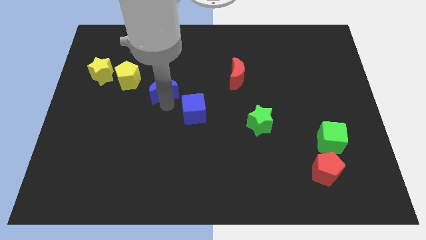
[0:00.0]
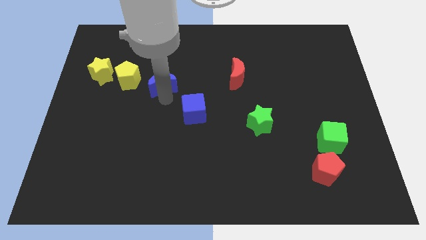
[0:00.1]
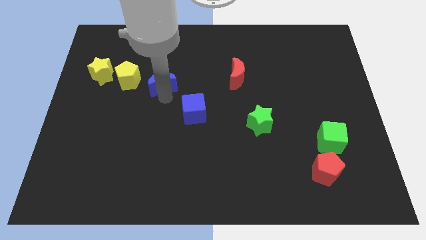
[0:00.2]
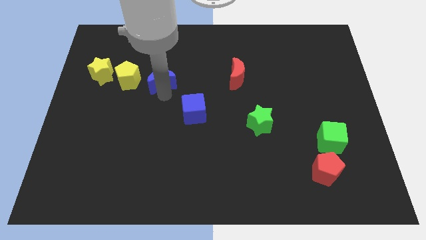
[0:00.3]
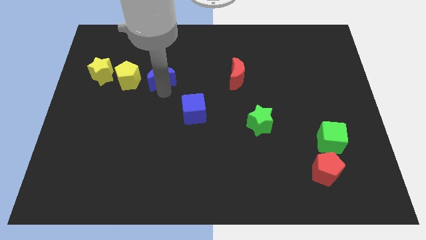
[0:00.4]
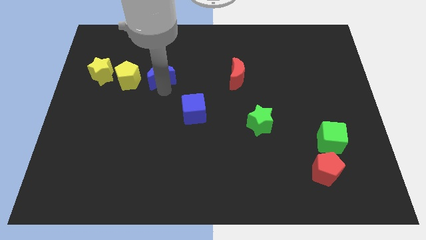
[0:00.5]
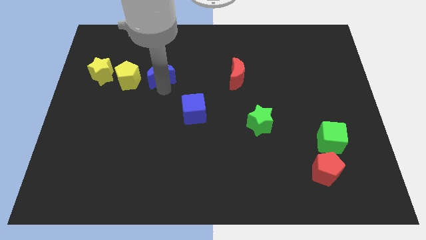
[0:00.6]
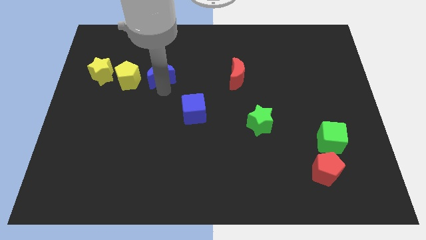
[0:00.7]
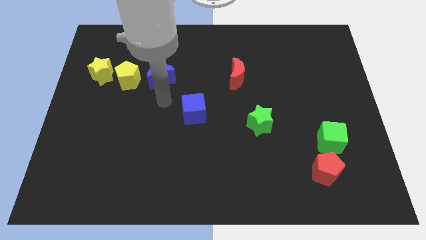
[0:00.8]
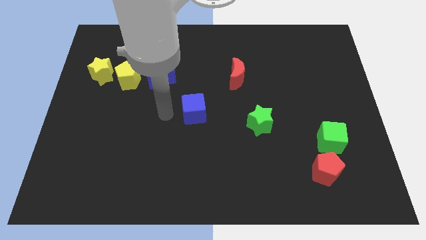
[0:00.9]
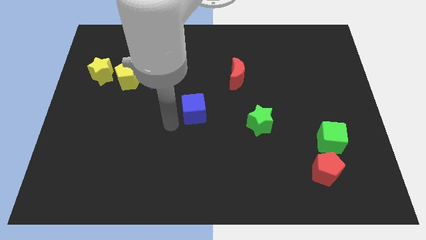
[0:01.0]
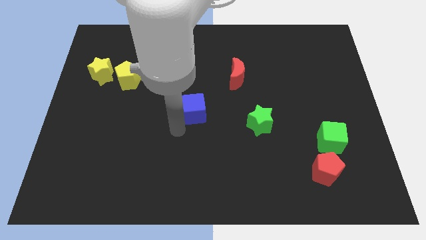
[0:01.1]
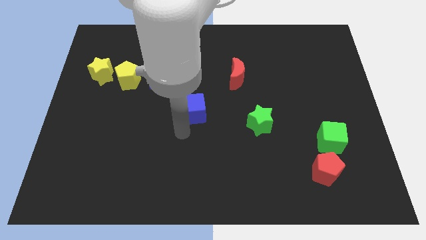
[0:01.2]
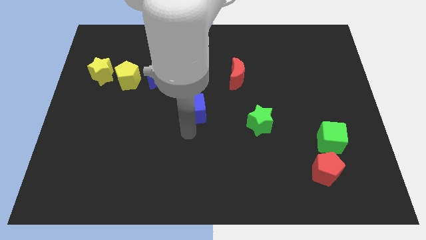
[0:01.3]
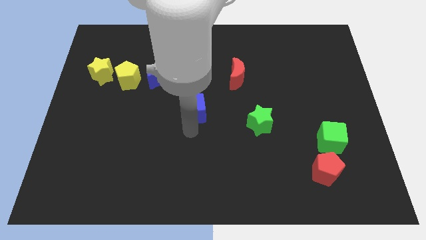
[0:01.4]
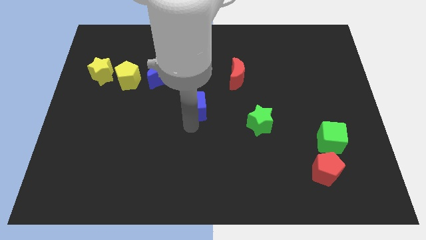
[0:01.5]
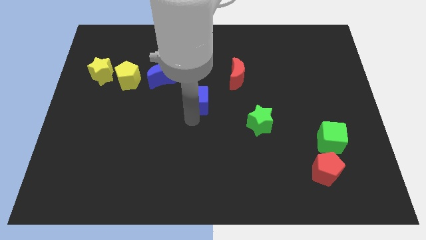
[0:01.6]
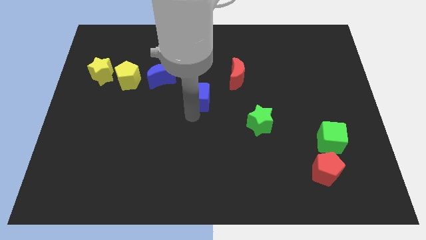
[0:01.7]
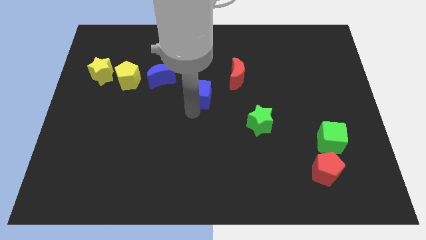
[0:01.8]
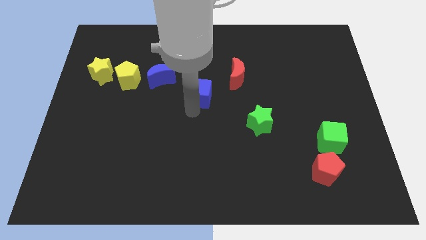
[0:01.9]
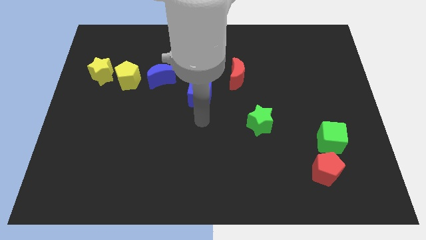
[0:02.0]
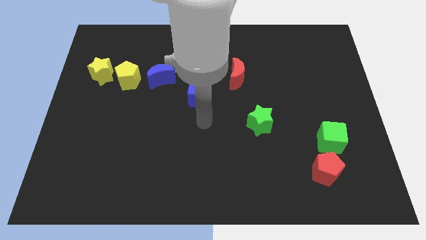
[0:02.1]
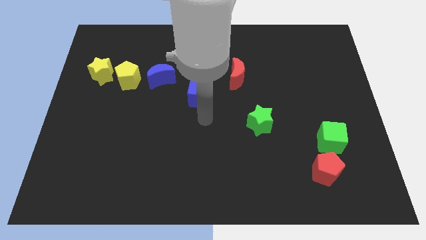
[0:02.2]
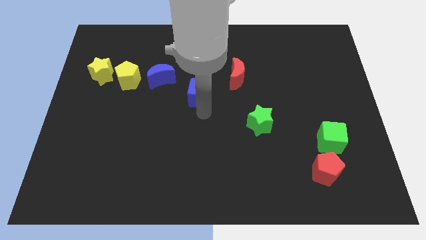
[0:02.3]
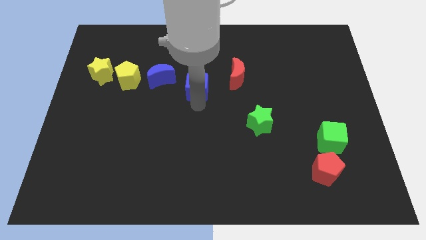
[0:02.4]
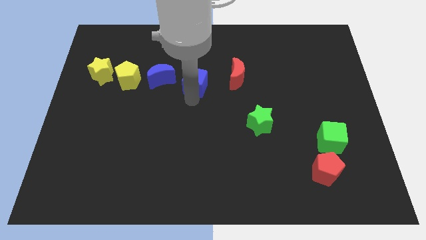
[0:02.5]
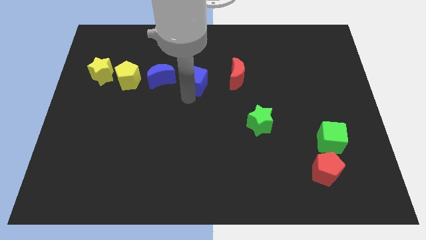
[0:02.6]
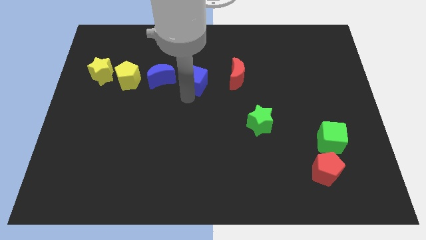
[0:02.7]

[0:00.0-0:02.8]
place blue cube beside blue crescent

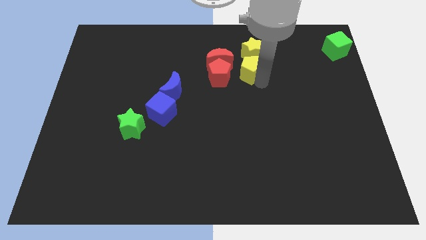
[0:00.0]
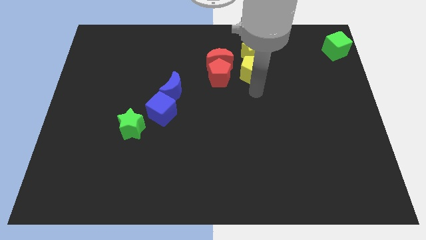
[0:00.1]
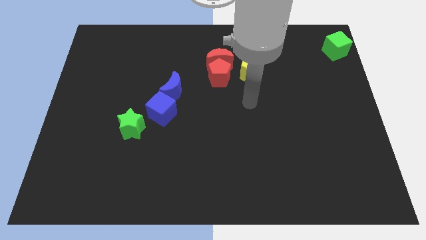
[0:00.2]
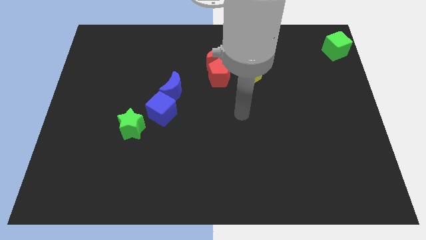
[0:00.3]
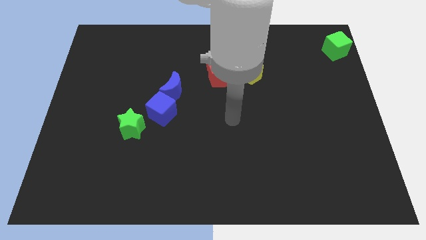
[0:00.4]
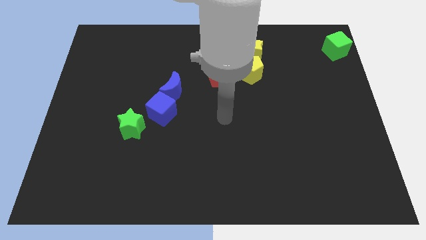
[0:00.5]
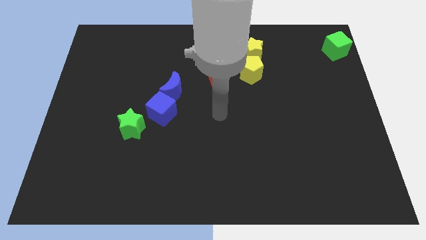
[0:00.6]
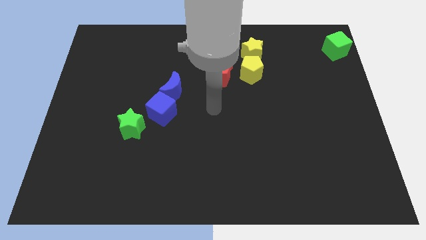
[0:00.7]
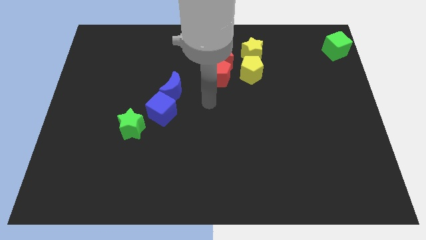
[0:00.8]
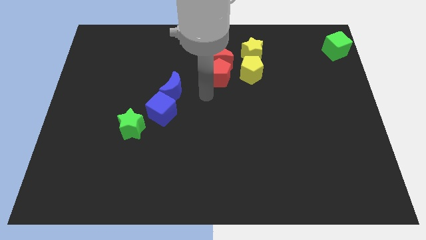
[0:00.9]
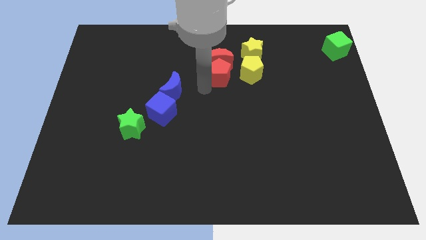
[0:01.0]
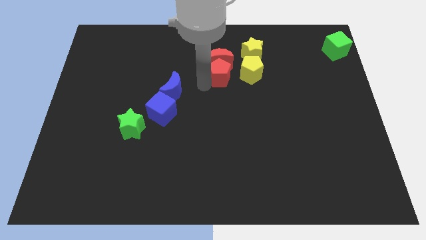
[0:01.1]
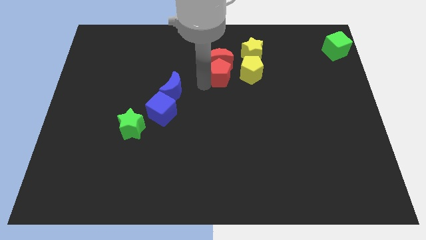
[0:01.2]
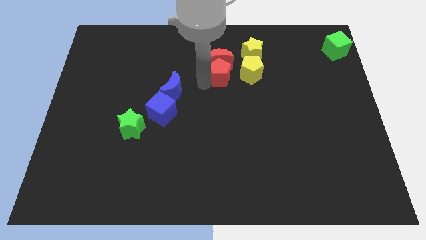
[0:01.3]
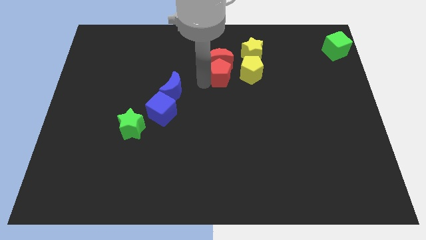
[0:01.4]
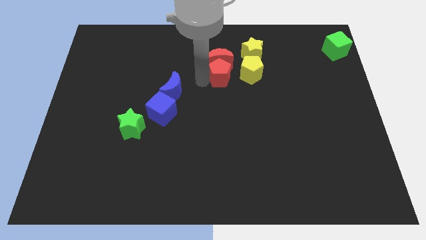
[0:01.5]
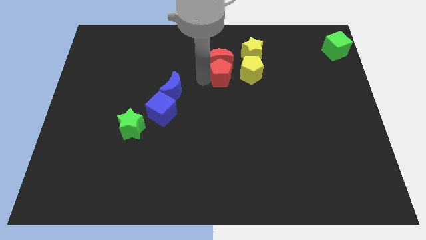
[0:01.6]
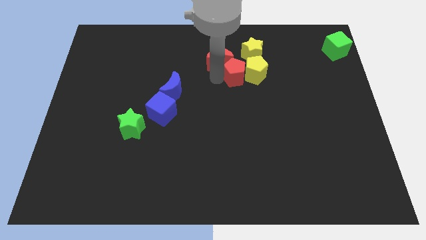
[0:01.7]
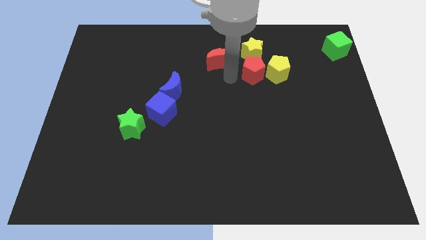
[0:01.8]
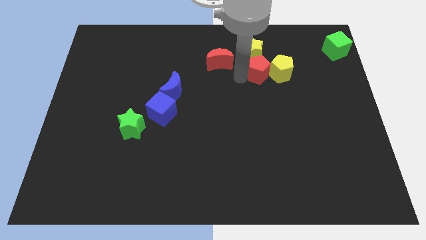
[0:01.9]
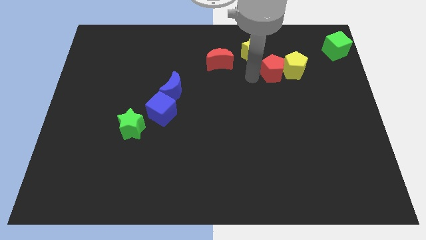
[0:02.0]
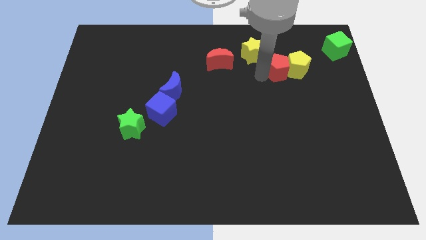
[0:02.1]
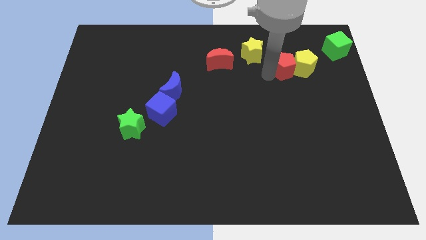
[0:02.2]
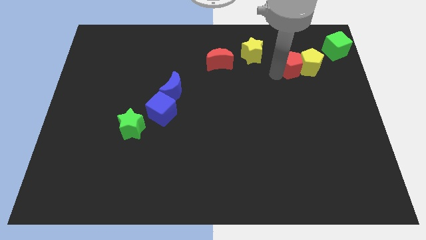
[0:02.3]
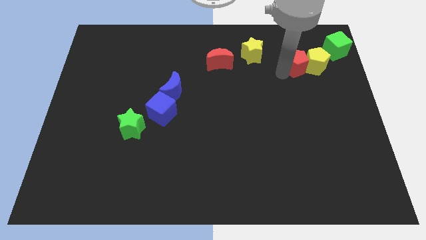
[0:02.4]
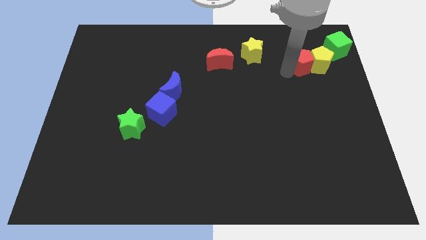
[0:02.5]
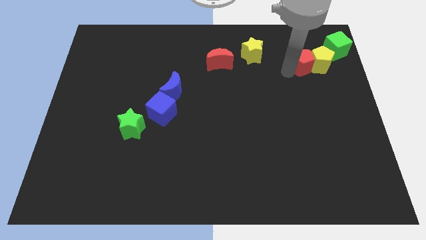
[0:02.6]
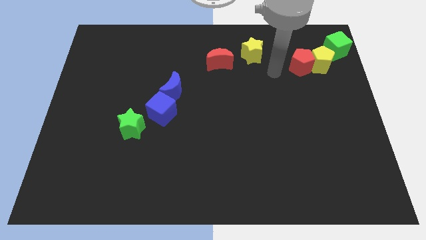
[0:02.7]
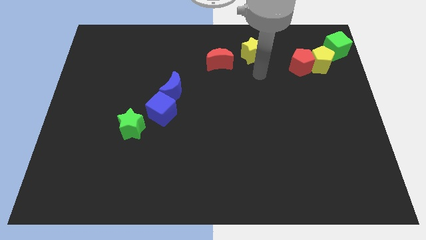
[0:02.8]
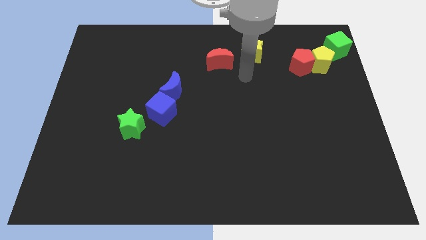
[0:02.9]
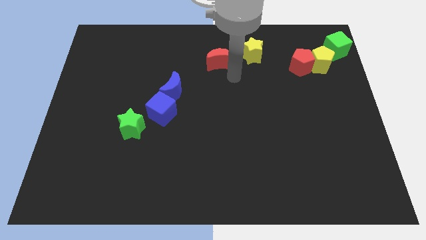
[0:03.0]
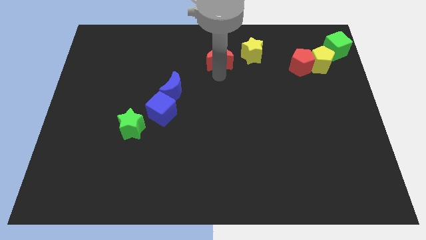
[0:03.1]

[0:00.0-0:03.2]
slide red and the yellow pentagon towards the top right

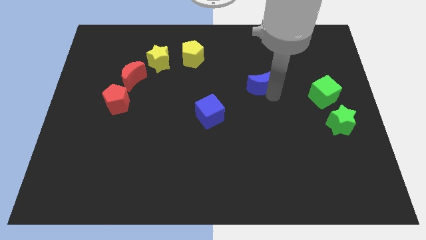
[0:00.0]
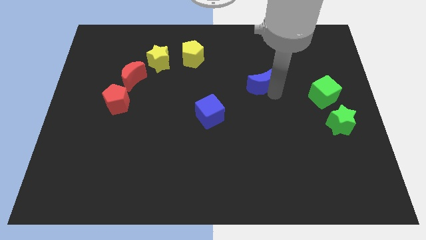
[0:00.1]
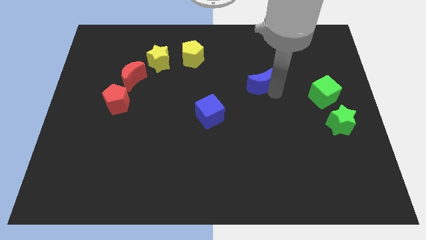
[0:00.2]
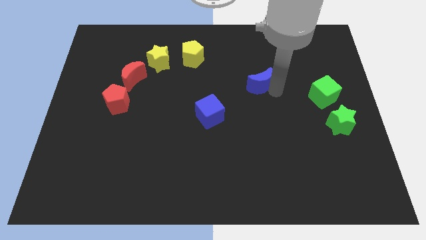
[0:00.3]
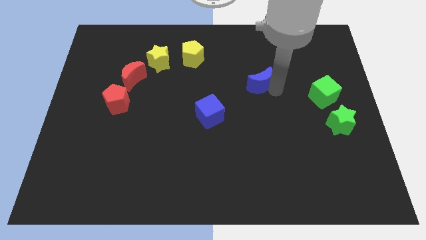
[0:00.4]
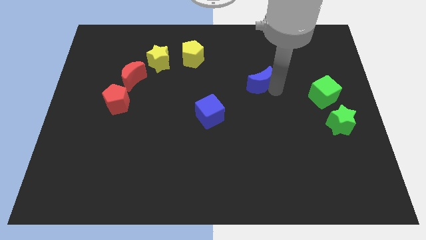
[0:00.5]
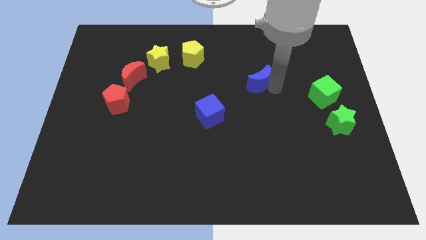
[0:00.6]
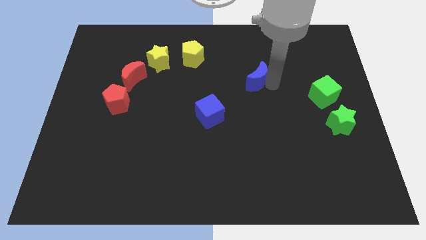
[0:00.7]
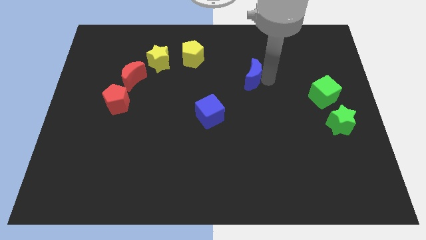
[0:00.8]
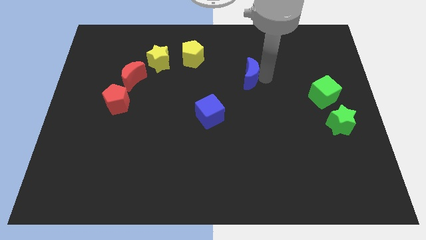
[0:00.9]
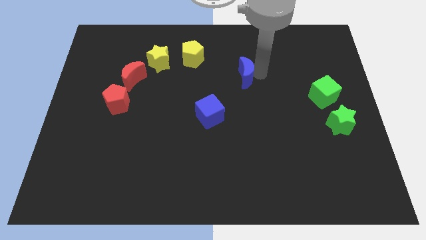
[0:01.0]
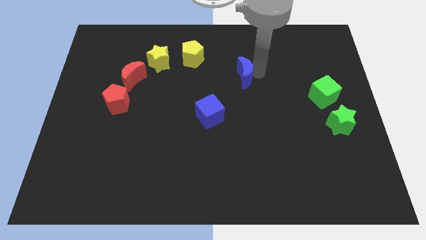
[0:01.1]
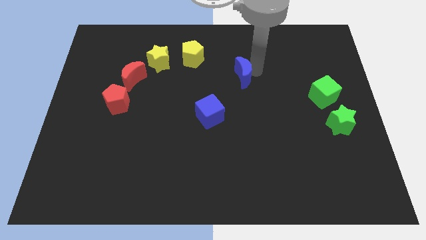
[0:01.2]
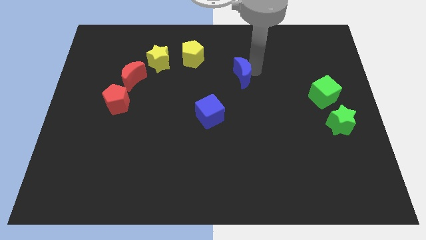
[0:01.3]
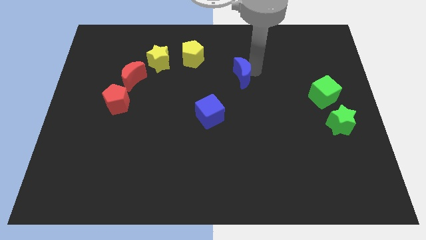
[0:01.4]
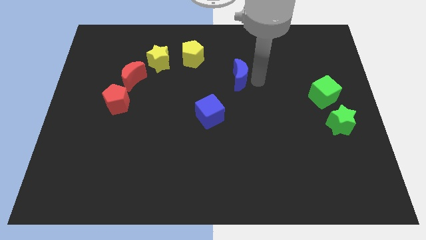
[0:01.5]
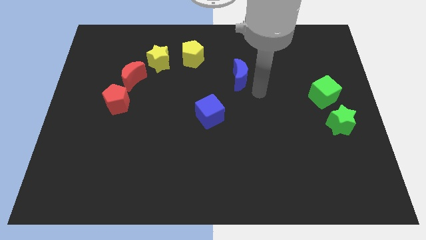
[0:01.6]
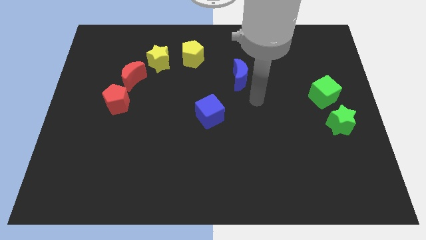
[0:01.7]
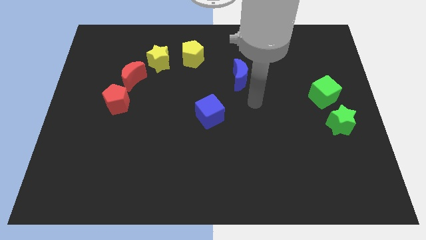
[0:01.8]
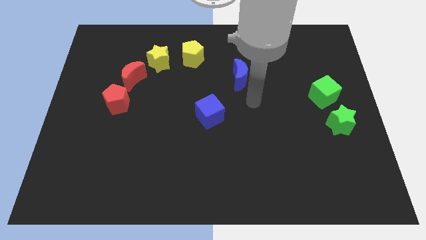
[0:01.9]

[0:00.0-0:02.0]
slightly move the blue crescent towards the yellow pentagon

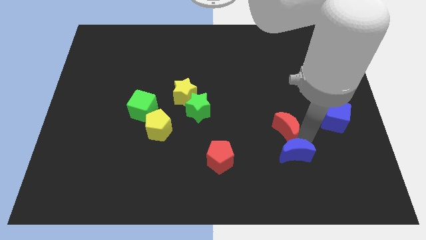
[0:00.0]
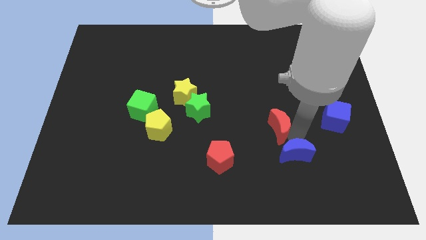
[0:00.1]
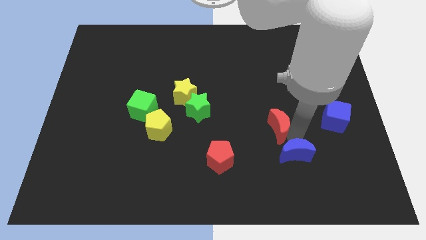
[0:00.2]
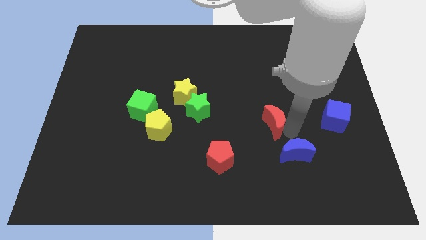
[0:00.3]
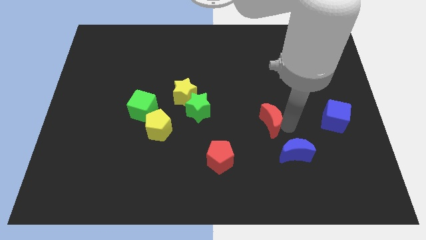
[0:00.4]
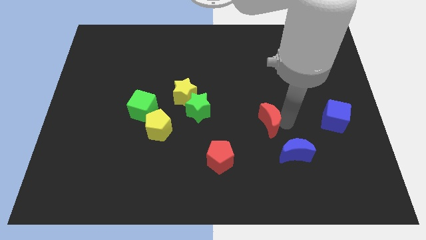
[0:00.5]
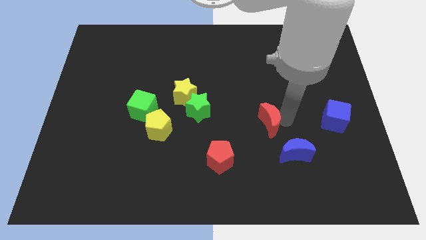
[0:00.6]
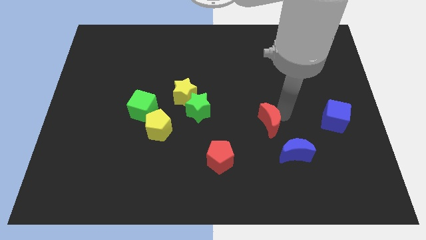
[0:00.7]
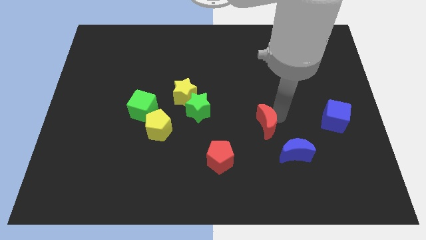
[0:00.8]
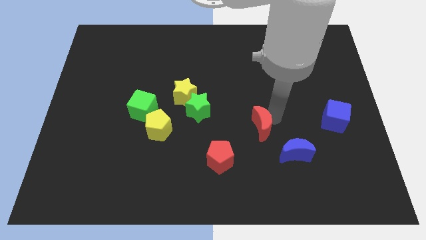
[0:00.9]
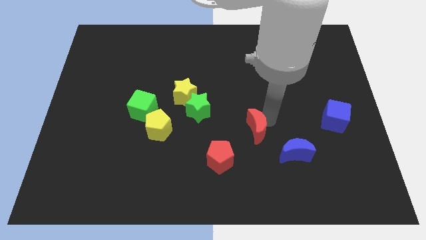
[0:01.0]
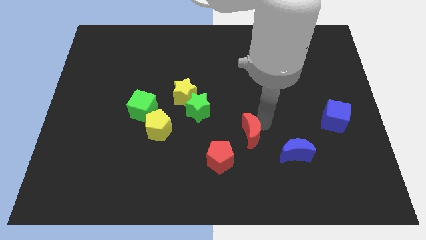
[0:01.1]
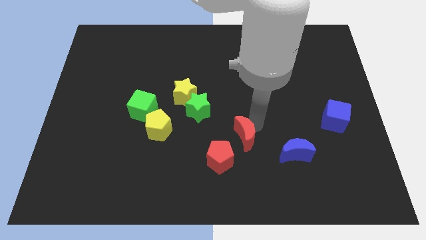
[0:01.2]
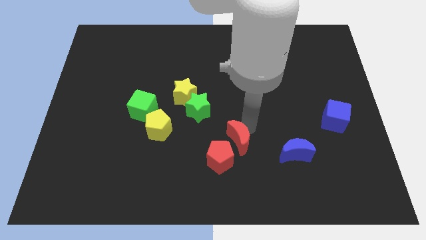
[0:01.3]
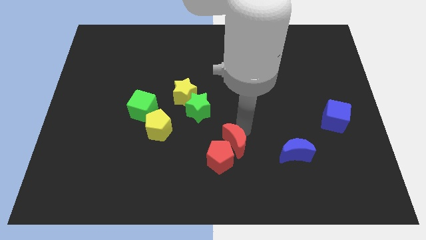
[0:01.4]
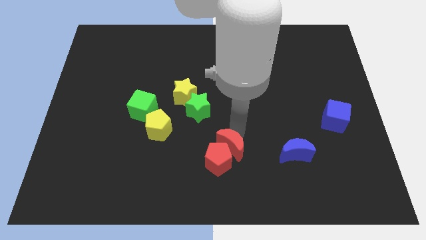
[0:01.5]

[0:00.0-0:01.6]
move red crescent in to the red pentagon
